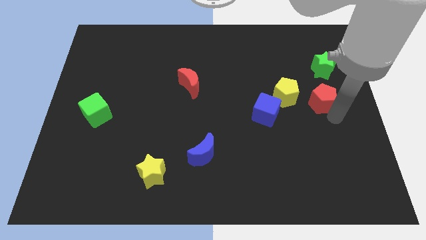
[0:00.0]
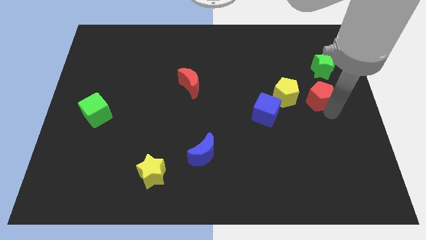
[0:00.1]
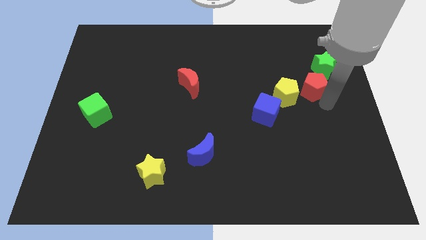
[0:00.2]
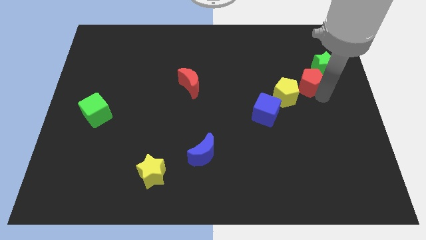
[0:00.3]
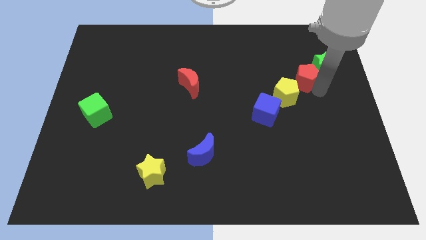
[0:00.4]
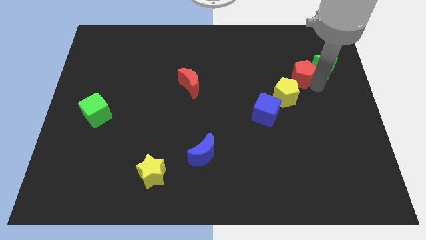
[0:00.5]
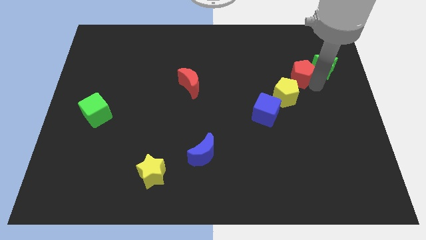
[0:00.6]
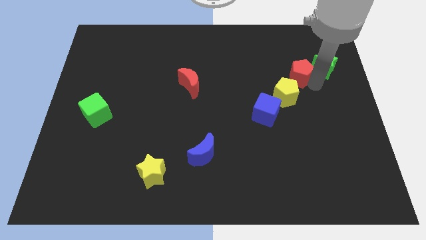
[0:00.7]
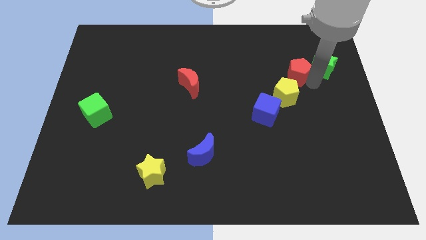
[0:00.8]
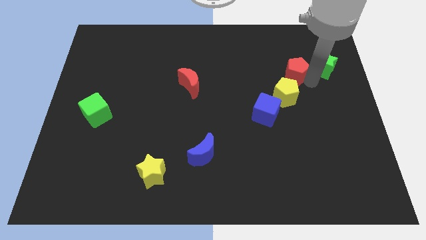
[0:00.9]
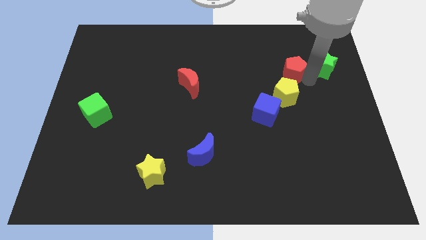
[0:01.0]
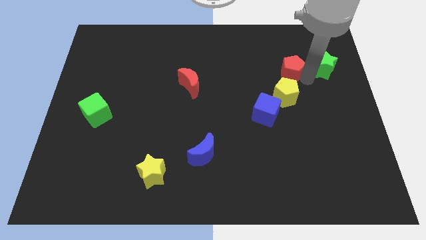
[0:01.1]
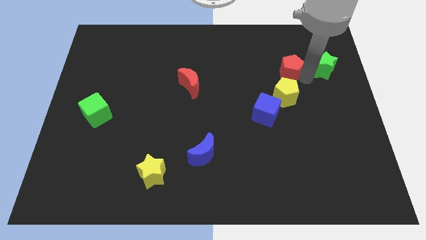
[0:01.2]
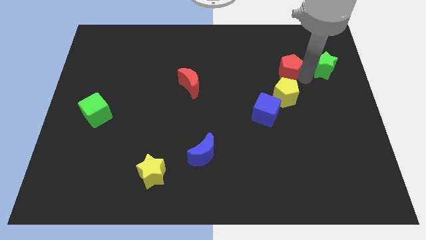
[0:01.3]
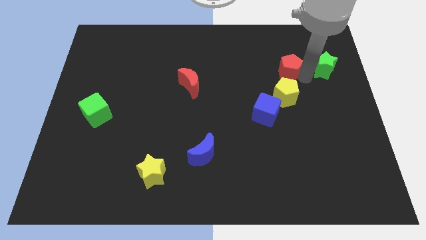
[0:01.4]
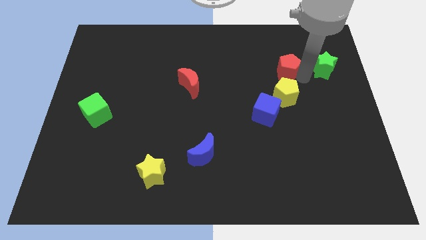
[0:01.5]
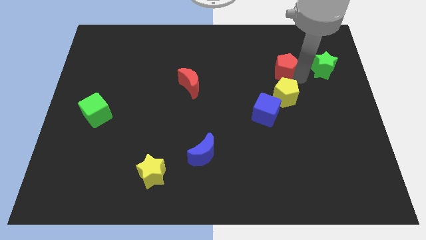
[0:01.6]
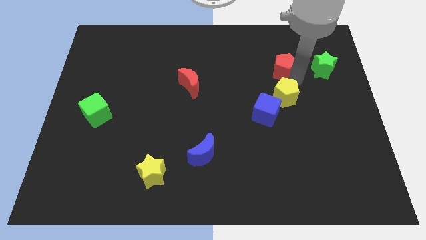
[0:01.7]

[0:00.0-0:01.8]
slide the red pentagon left to the green star

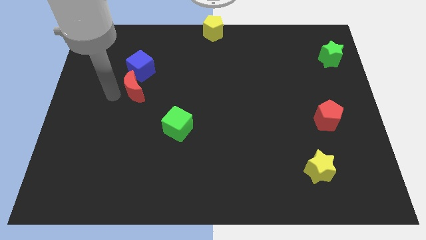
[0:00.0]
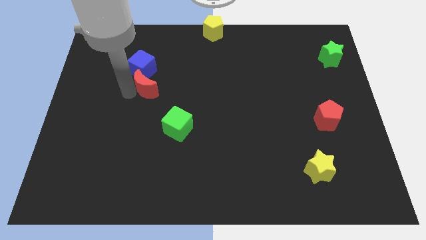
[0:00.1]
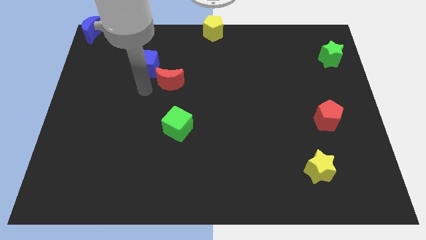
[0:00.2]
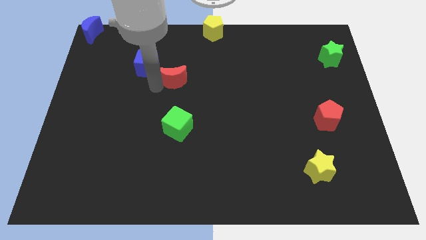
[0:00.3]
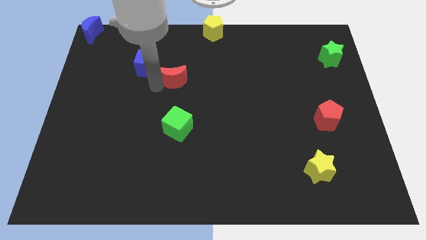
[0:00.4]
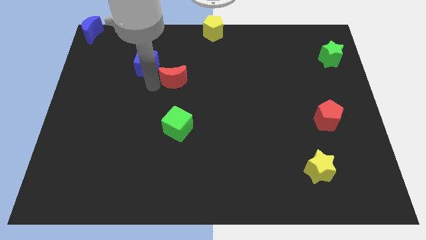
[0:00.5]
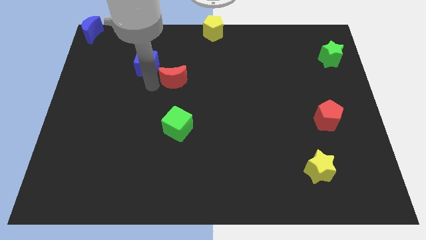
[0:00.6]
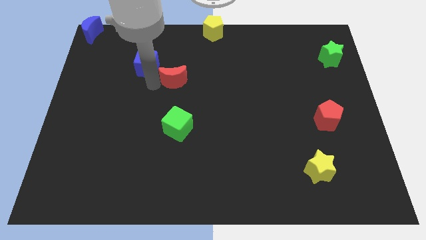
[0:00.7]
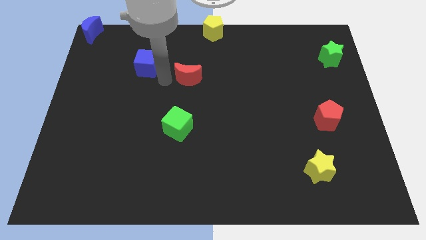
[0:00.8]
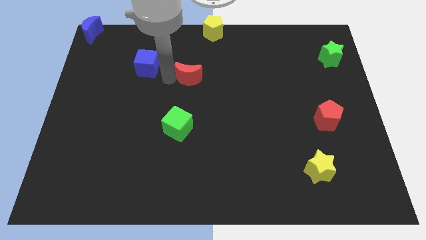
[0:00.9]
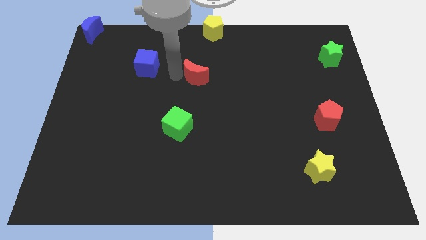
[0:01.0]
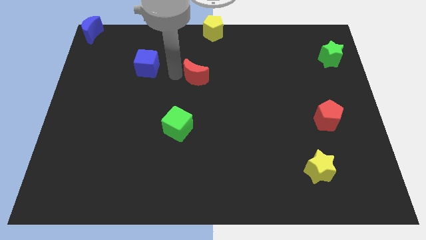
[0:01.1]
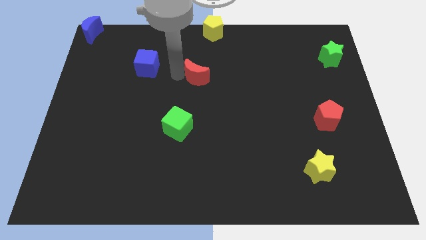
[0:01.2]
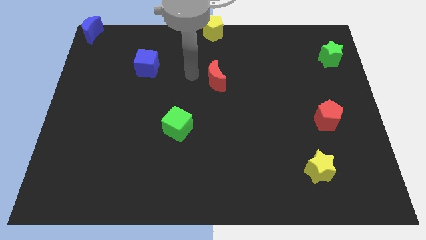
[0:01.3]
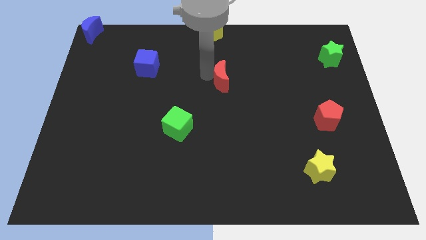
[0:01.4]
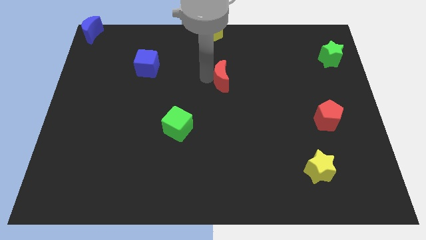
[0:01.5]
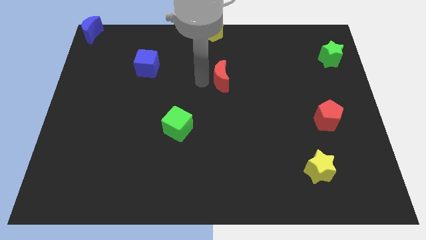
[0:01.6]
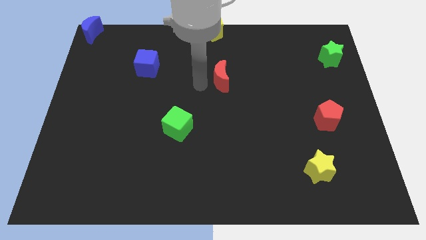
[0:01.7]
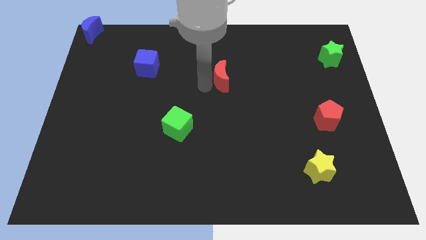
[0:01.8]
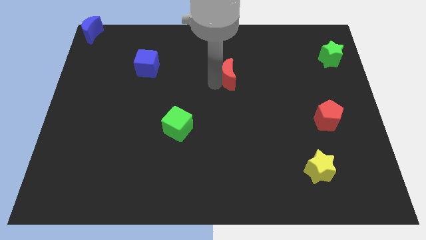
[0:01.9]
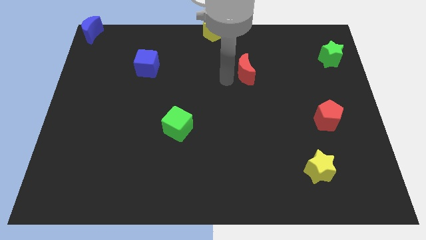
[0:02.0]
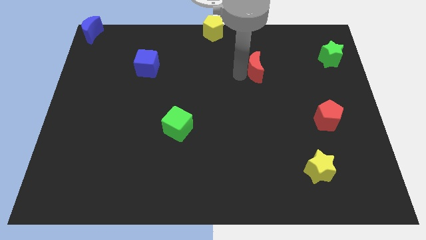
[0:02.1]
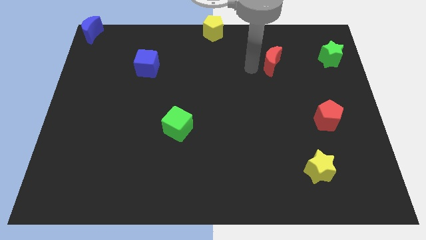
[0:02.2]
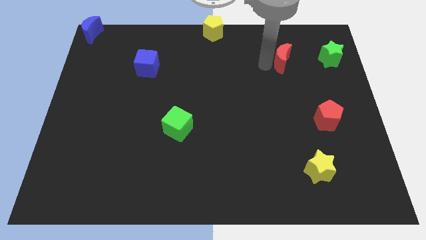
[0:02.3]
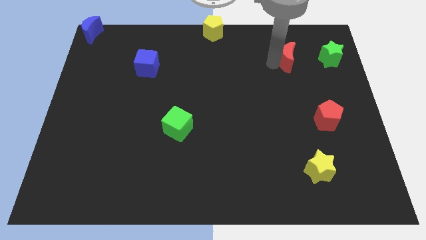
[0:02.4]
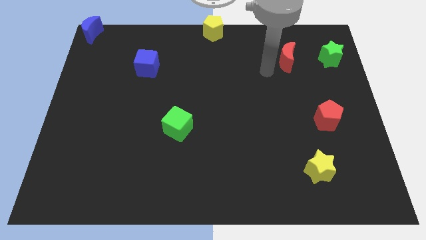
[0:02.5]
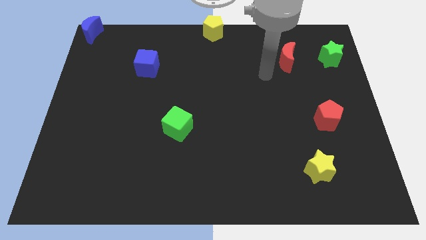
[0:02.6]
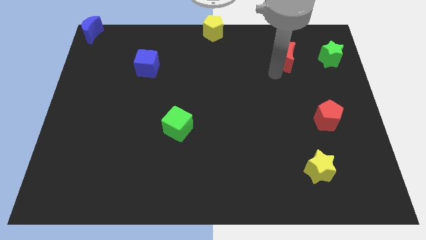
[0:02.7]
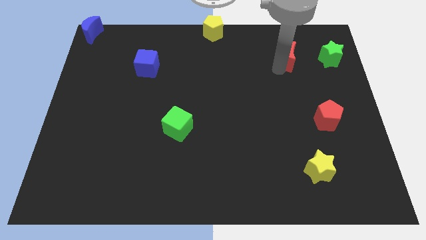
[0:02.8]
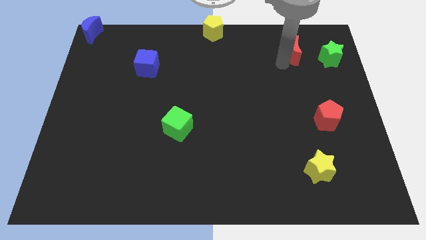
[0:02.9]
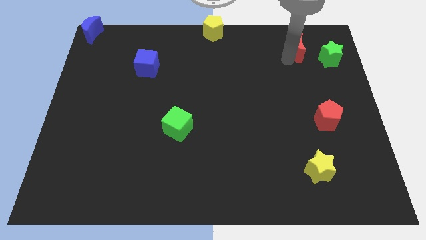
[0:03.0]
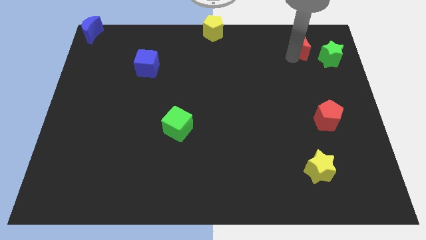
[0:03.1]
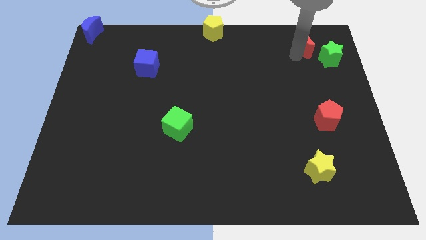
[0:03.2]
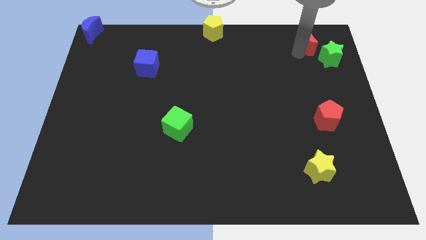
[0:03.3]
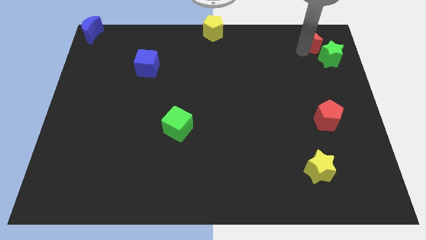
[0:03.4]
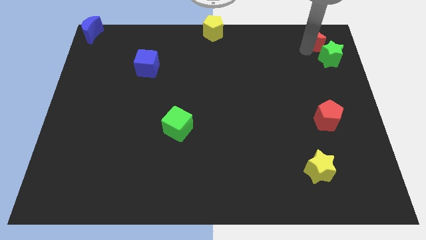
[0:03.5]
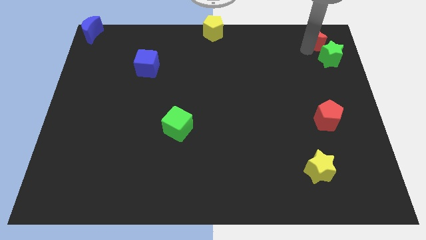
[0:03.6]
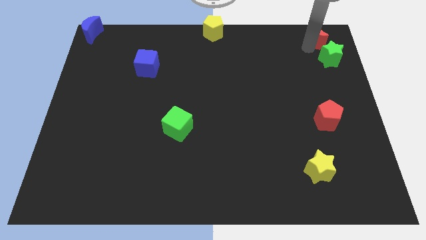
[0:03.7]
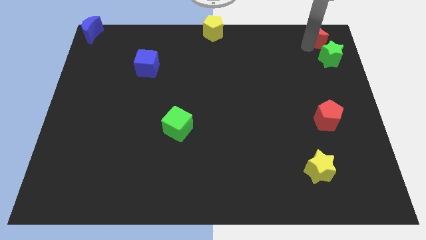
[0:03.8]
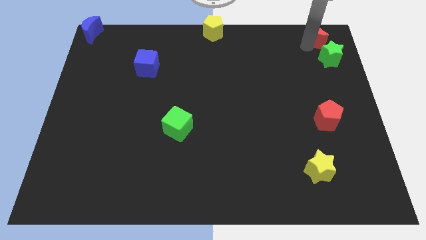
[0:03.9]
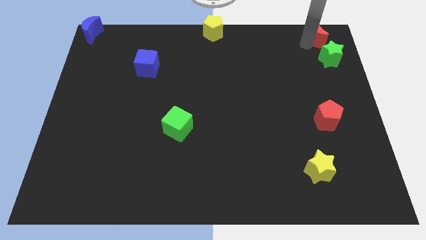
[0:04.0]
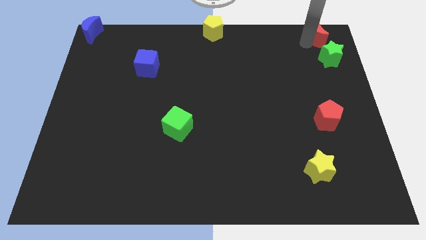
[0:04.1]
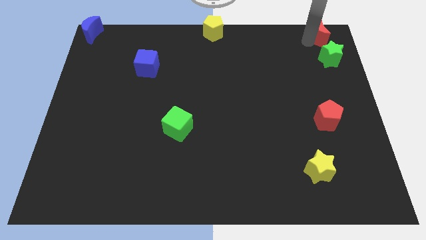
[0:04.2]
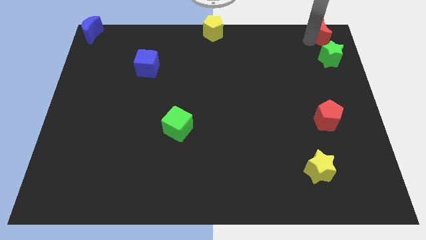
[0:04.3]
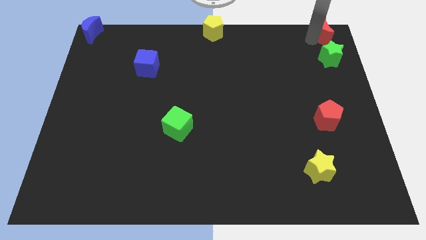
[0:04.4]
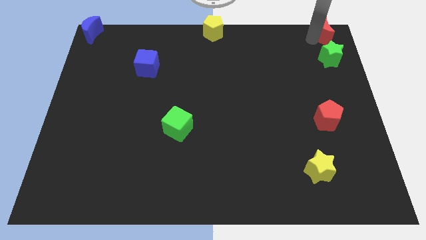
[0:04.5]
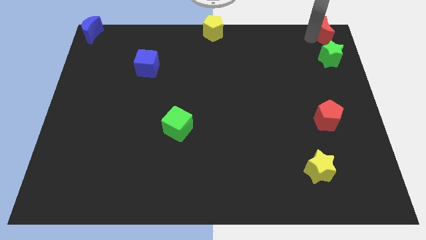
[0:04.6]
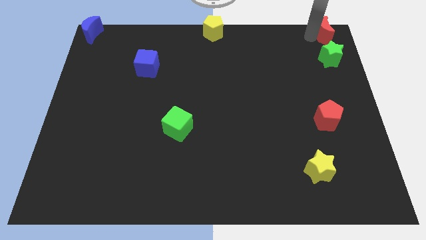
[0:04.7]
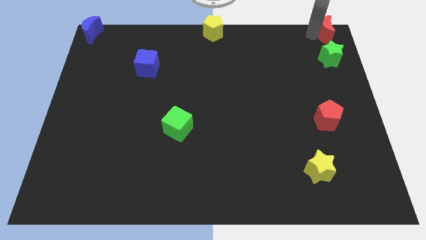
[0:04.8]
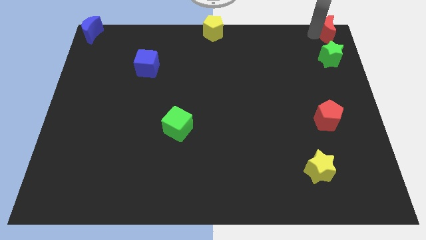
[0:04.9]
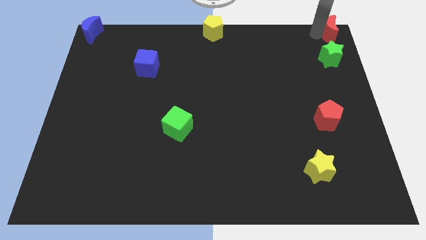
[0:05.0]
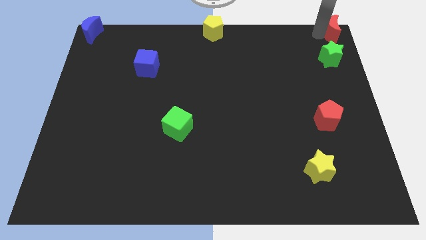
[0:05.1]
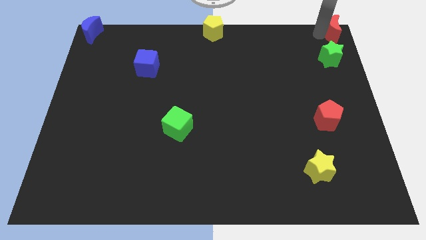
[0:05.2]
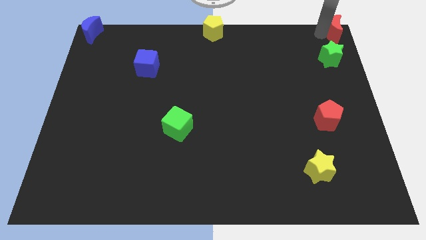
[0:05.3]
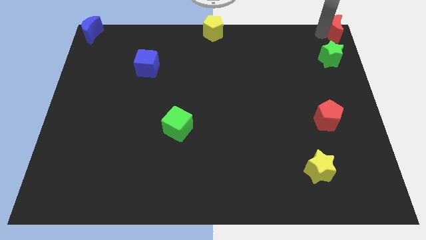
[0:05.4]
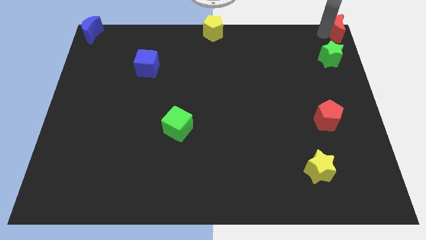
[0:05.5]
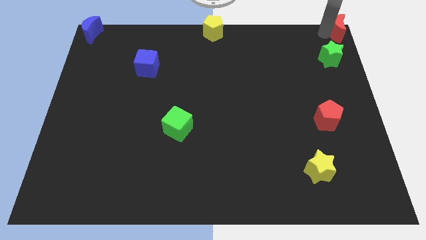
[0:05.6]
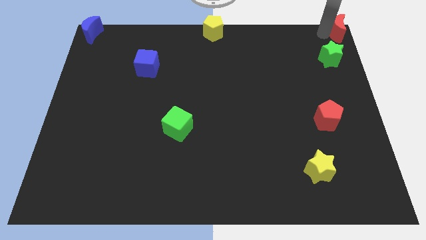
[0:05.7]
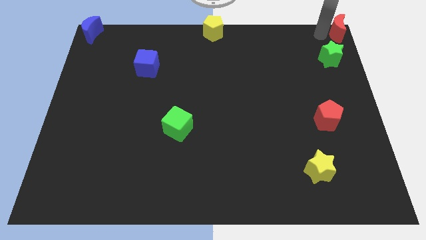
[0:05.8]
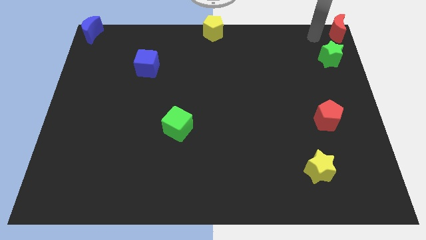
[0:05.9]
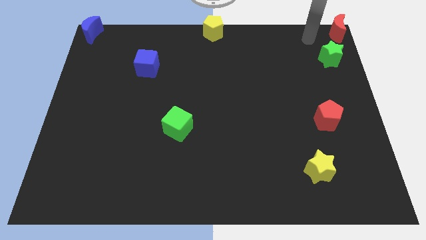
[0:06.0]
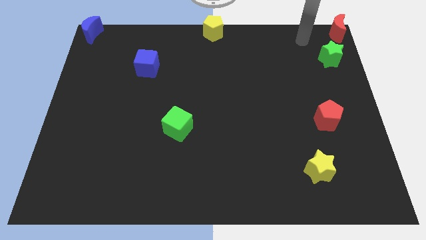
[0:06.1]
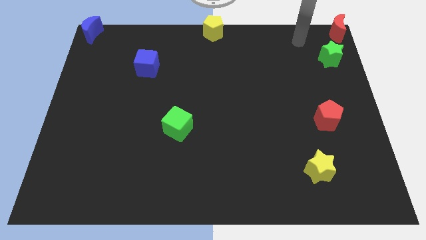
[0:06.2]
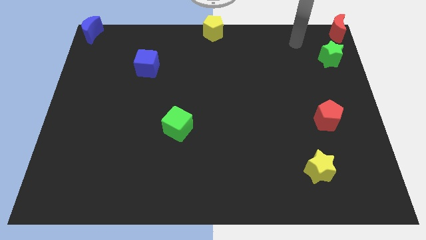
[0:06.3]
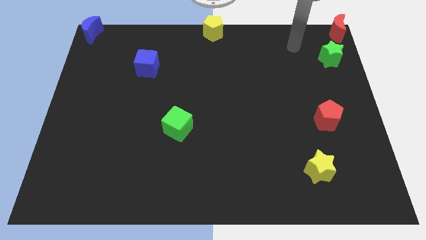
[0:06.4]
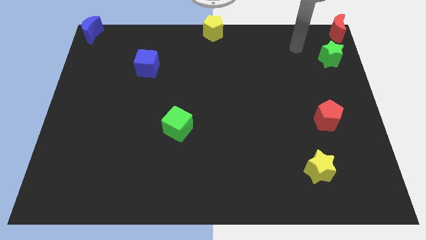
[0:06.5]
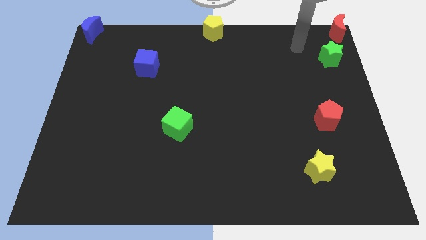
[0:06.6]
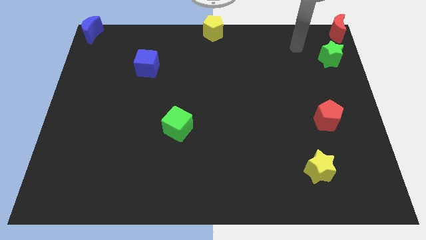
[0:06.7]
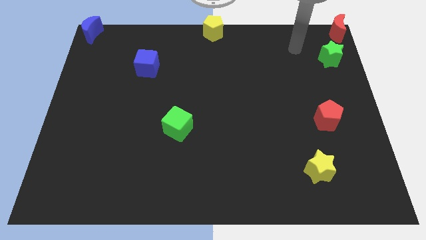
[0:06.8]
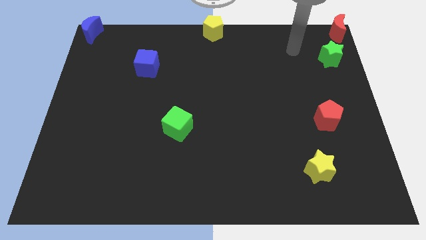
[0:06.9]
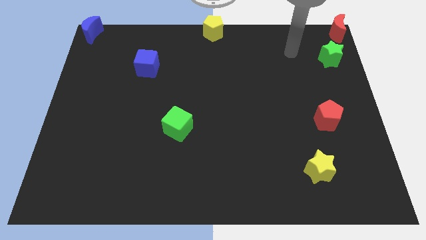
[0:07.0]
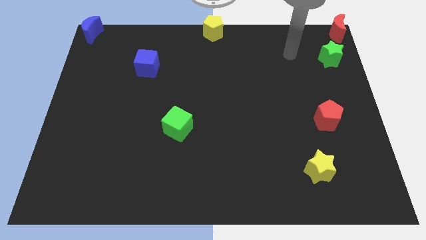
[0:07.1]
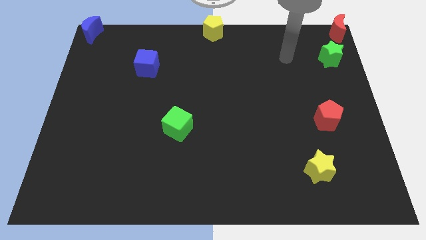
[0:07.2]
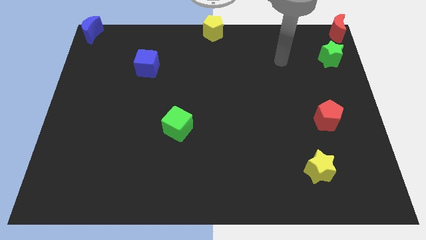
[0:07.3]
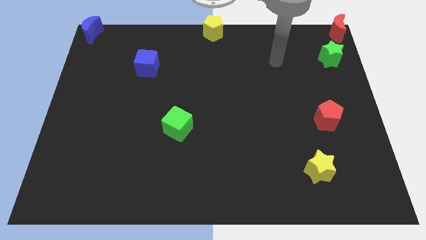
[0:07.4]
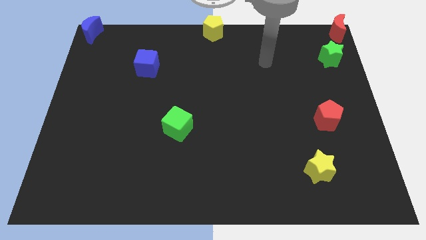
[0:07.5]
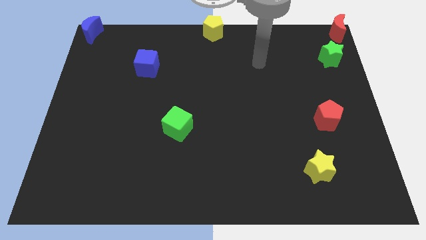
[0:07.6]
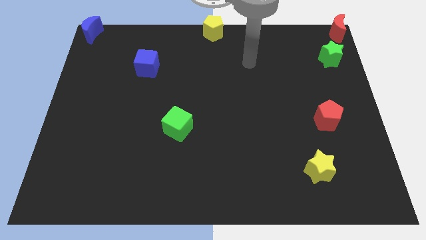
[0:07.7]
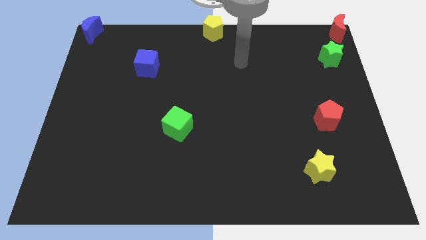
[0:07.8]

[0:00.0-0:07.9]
move the red crescent to the top right corner
